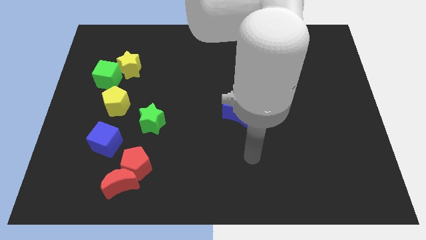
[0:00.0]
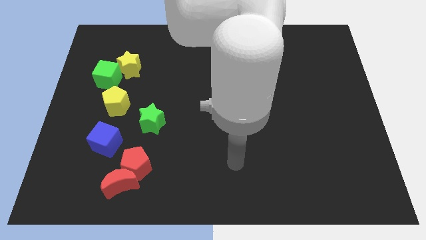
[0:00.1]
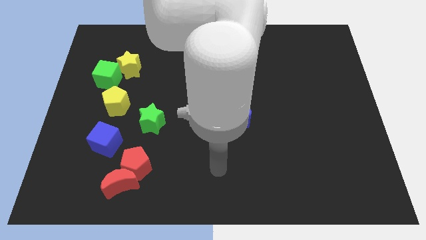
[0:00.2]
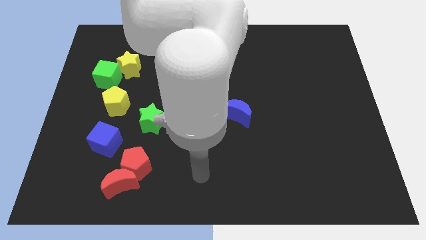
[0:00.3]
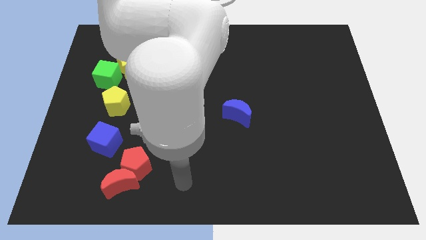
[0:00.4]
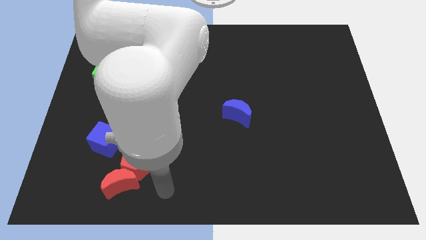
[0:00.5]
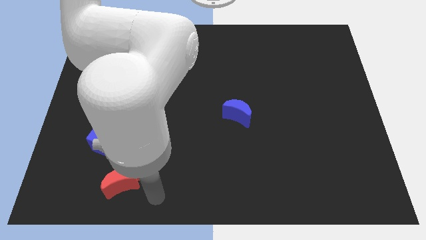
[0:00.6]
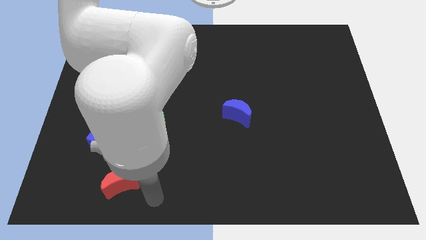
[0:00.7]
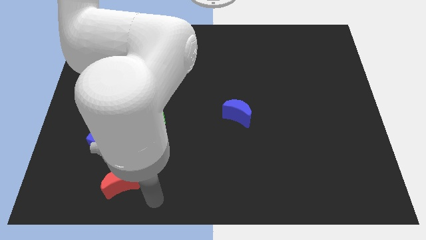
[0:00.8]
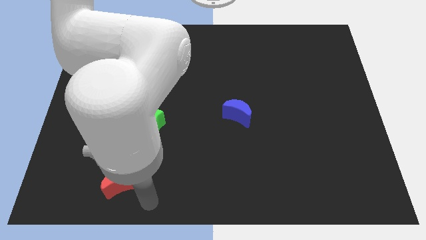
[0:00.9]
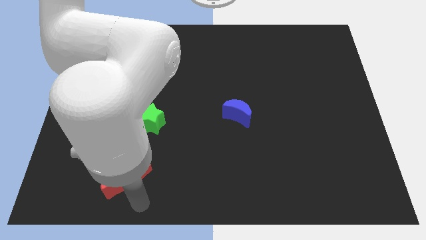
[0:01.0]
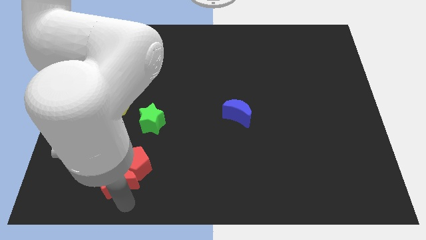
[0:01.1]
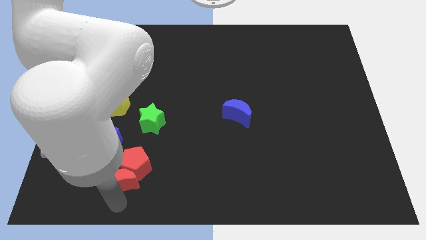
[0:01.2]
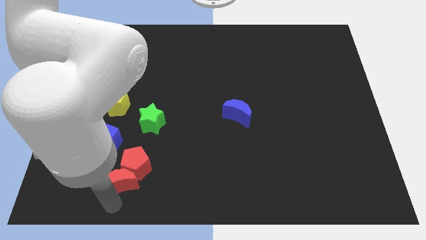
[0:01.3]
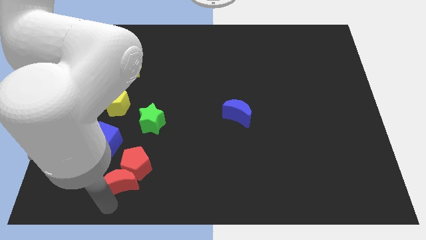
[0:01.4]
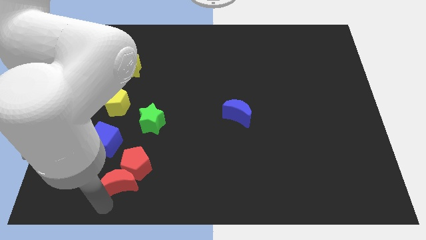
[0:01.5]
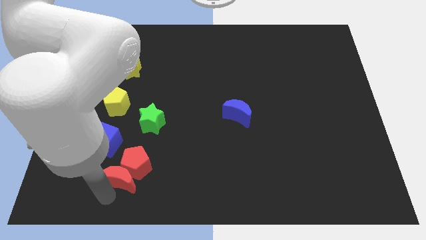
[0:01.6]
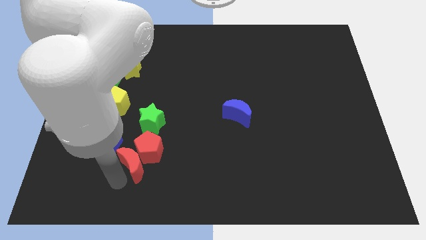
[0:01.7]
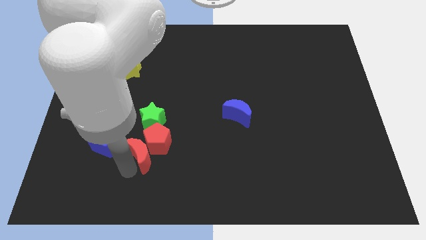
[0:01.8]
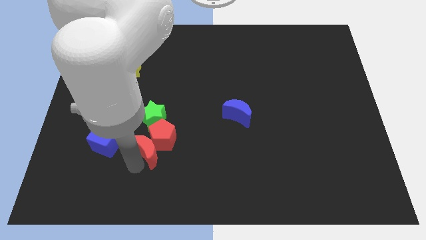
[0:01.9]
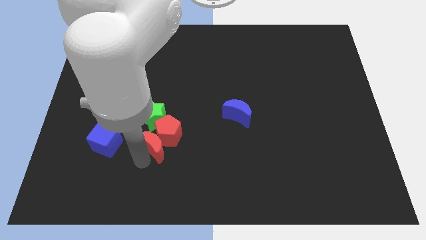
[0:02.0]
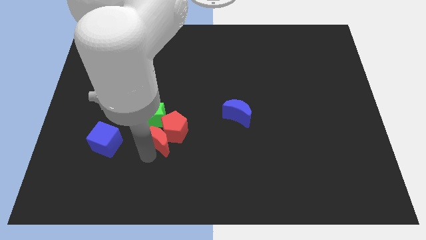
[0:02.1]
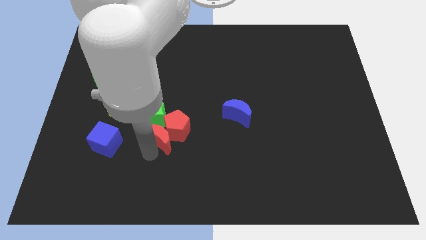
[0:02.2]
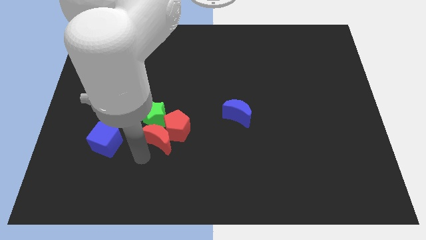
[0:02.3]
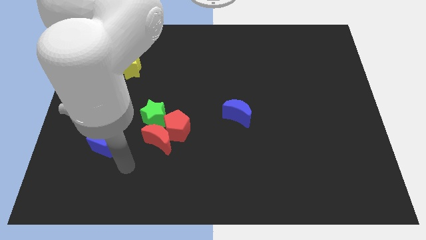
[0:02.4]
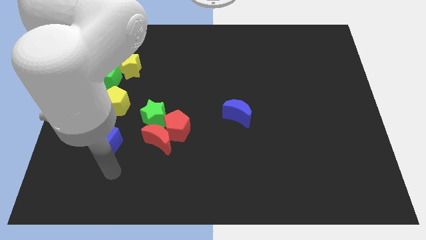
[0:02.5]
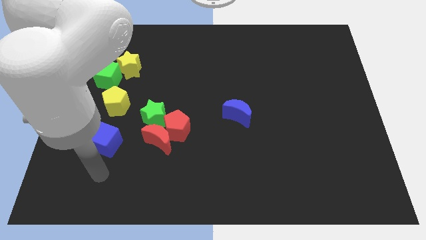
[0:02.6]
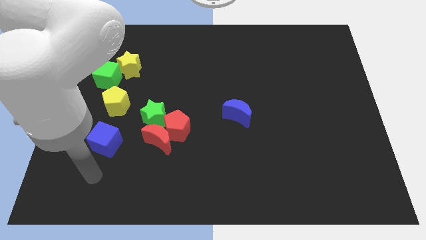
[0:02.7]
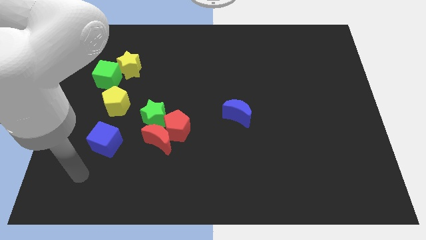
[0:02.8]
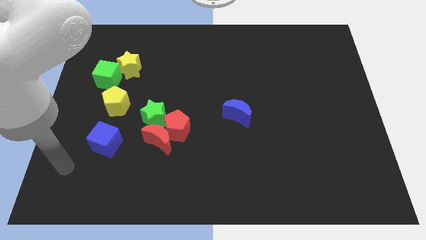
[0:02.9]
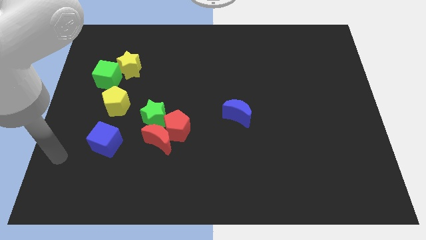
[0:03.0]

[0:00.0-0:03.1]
push the red pentagon with the red crescent towards top

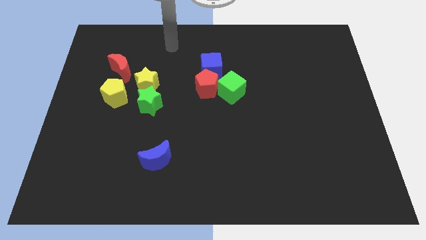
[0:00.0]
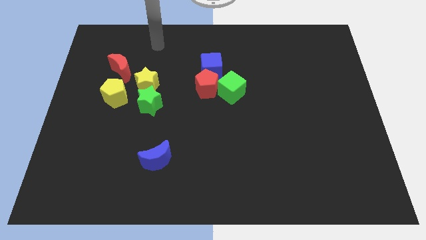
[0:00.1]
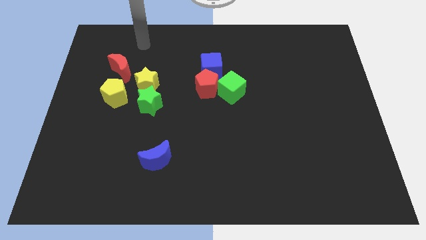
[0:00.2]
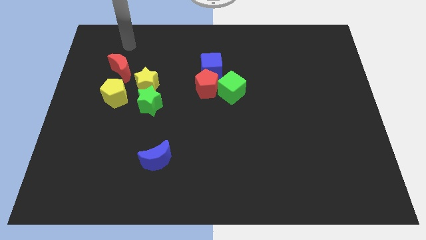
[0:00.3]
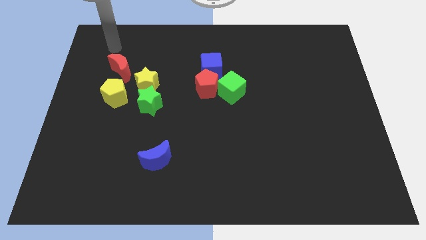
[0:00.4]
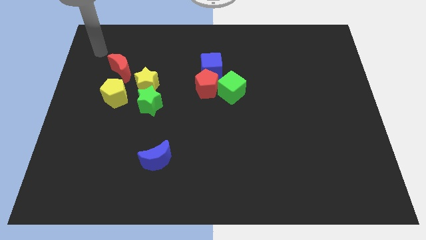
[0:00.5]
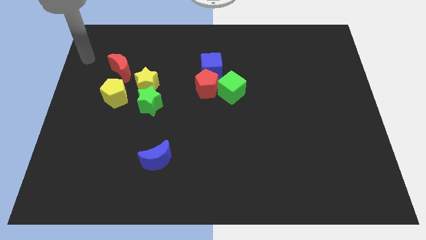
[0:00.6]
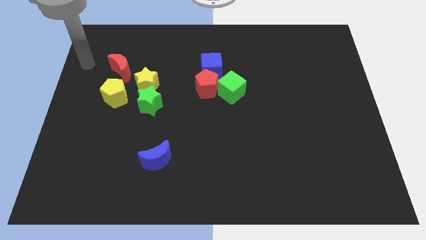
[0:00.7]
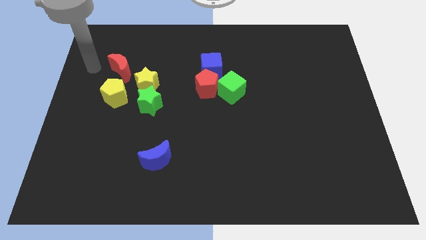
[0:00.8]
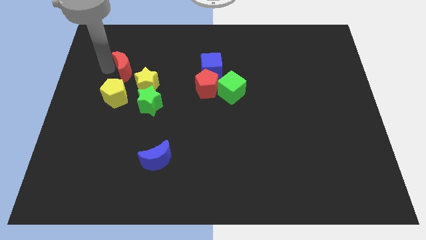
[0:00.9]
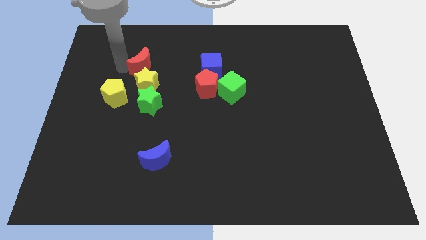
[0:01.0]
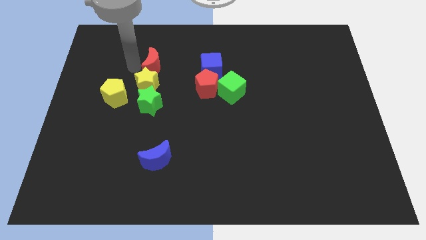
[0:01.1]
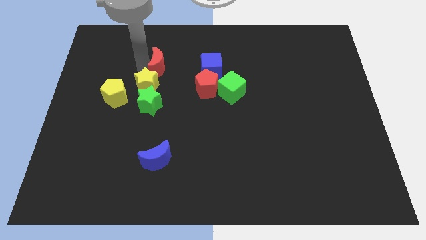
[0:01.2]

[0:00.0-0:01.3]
place the red crescent at the top of the yellow star

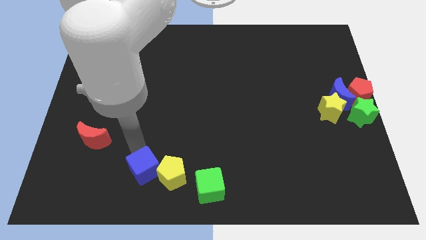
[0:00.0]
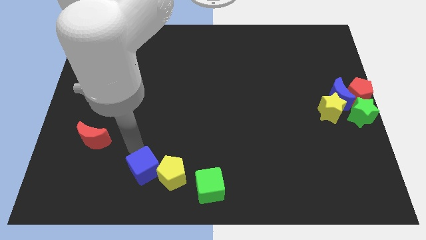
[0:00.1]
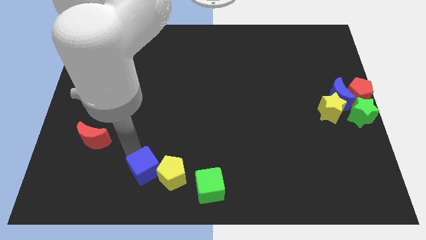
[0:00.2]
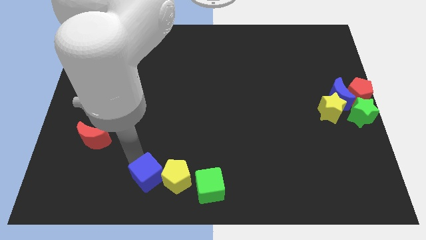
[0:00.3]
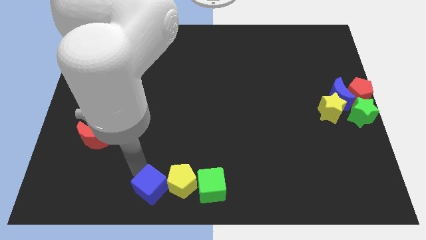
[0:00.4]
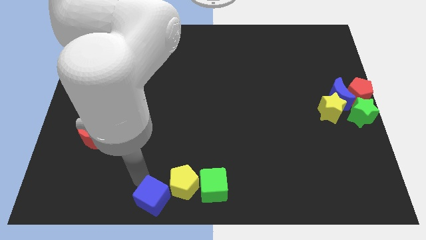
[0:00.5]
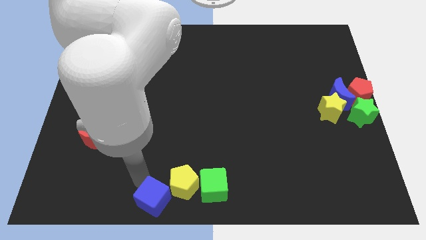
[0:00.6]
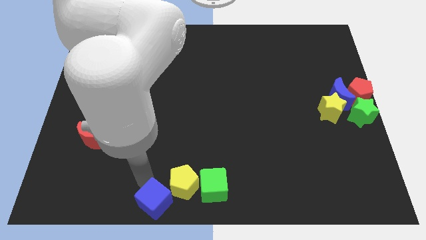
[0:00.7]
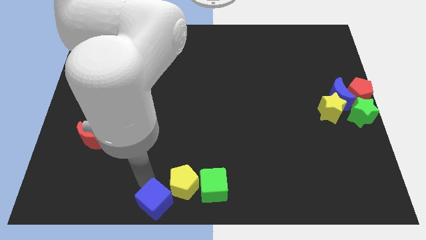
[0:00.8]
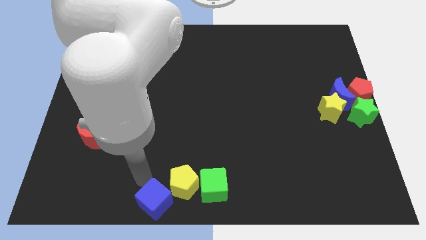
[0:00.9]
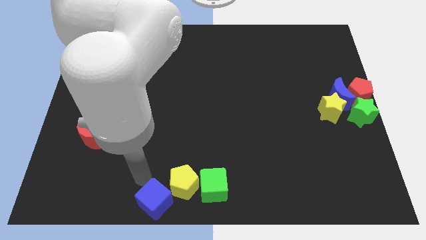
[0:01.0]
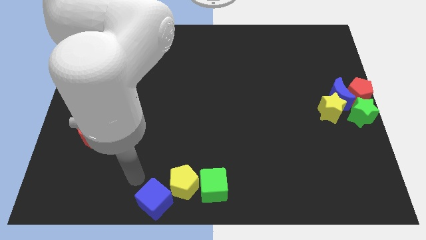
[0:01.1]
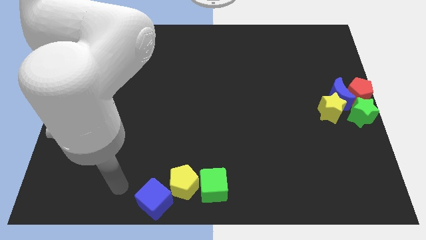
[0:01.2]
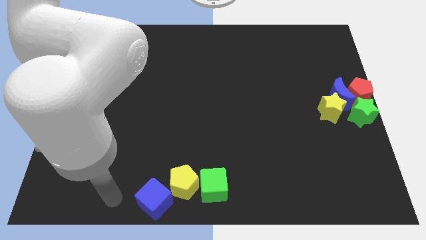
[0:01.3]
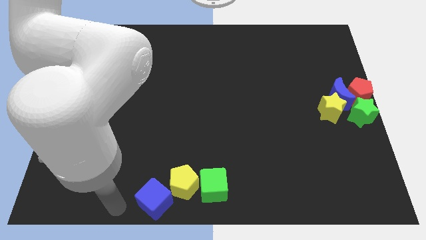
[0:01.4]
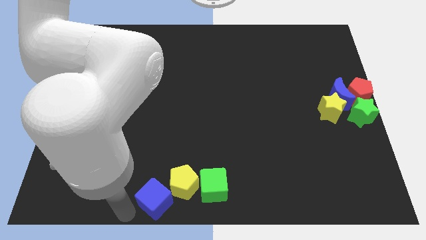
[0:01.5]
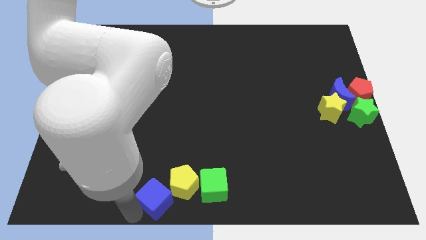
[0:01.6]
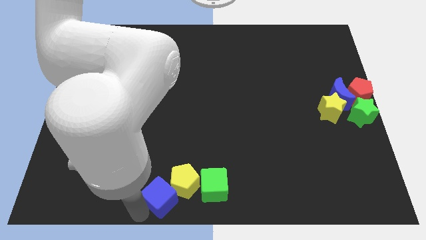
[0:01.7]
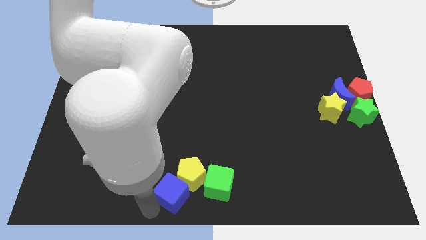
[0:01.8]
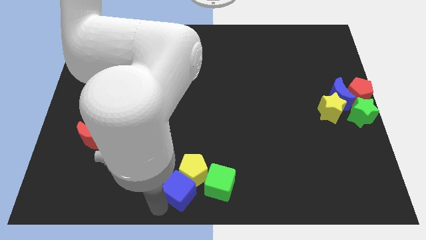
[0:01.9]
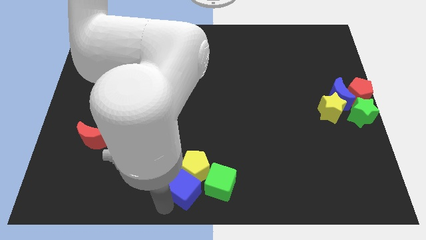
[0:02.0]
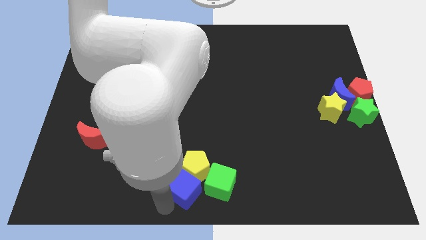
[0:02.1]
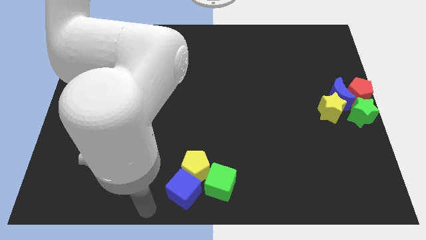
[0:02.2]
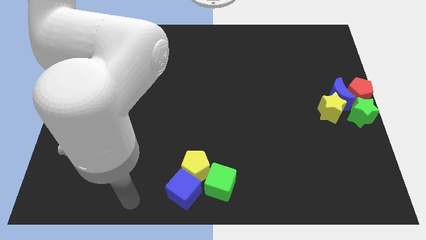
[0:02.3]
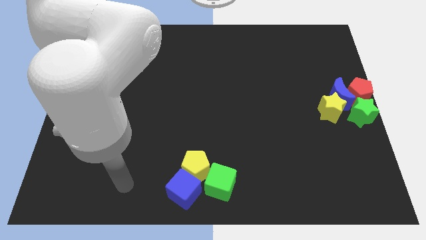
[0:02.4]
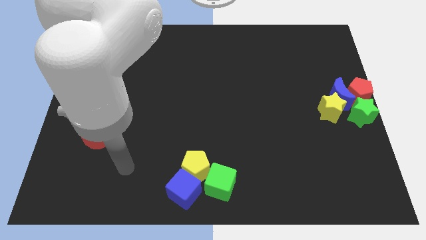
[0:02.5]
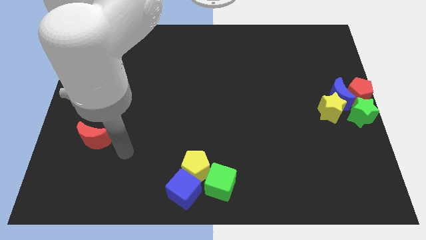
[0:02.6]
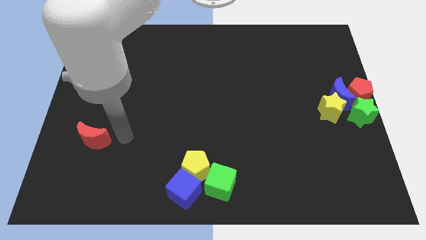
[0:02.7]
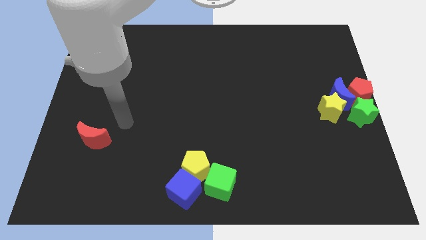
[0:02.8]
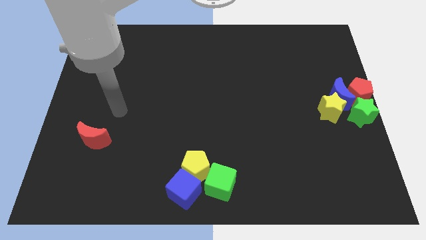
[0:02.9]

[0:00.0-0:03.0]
place blue cube to the left of green cube

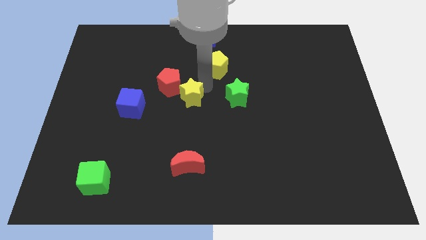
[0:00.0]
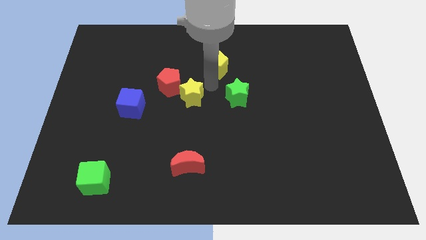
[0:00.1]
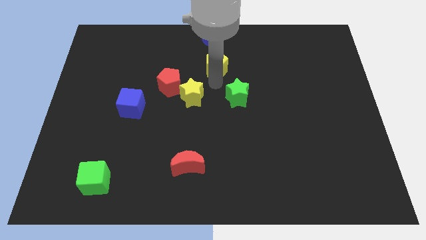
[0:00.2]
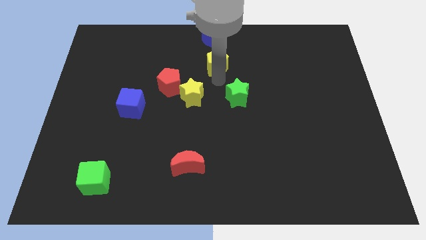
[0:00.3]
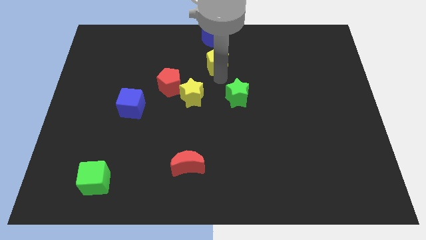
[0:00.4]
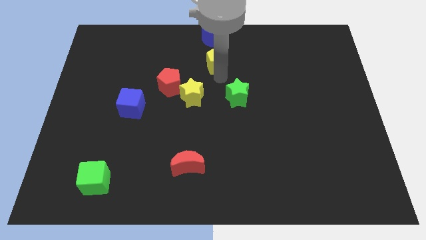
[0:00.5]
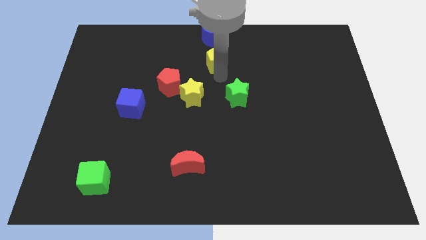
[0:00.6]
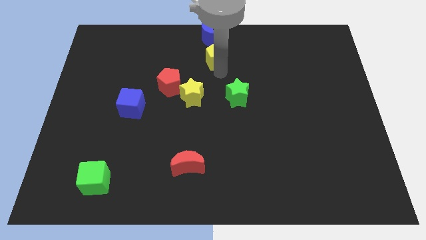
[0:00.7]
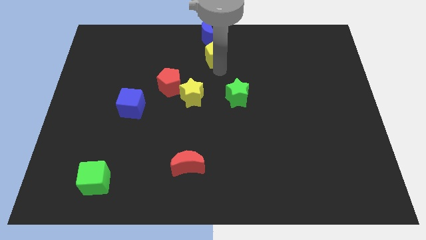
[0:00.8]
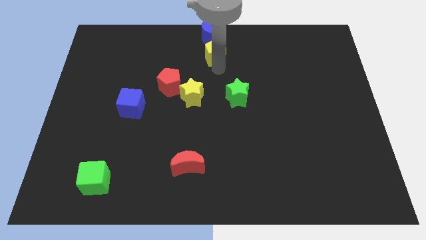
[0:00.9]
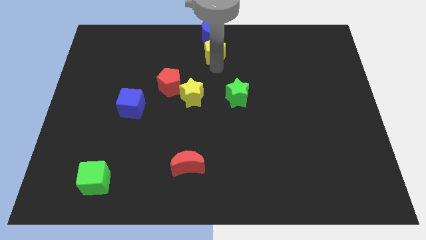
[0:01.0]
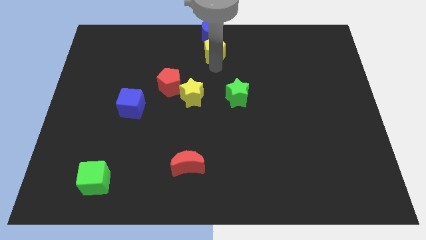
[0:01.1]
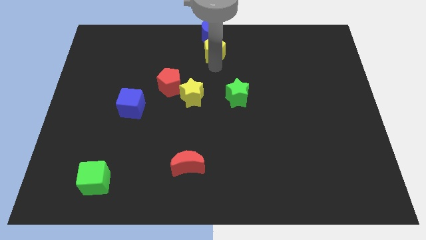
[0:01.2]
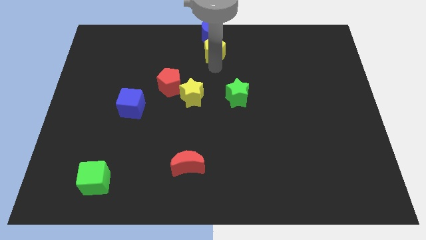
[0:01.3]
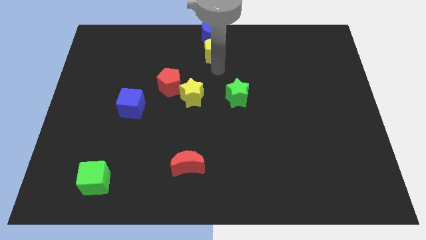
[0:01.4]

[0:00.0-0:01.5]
move the yellow pentagon to the bottom of the blue crescent
